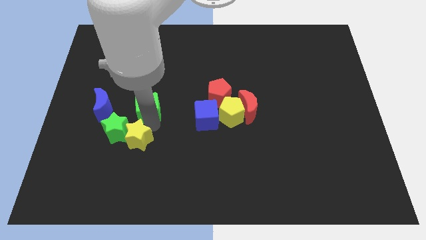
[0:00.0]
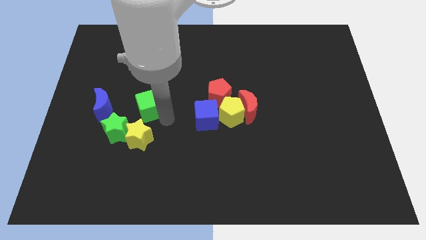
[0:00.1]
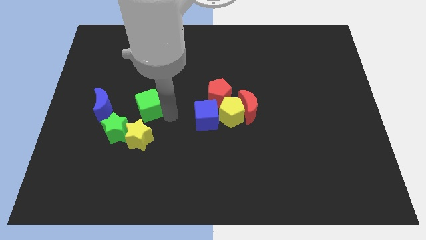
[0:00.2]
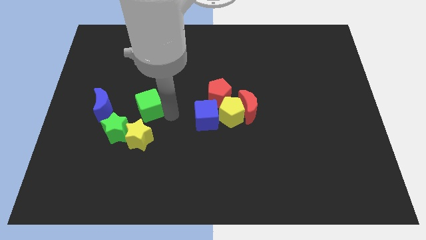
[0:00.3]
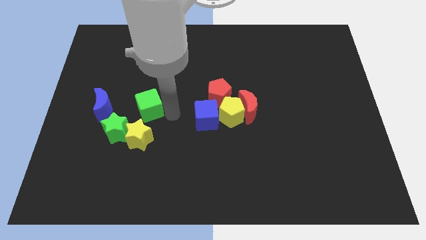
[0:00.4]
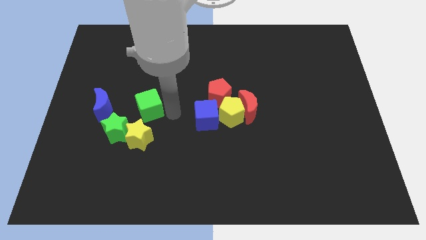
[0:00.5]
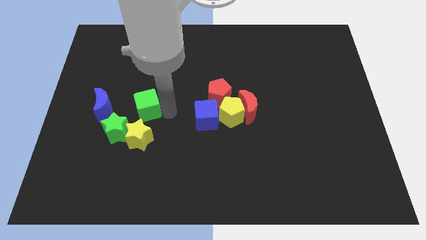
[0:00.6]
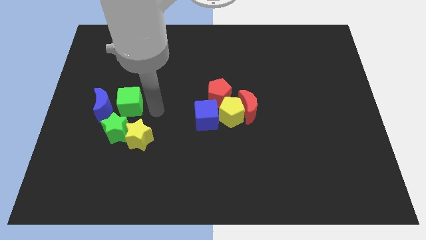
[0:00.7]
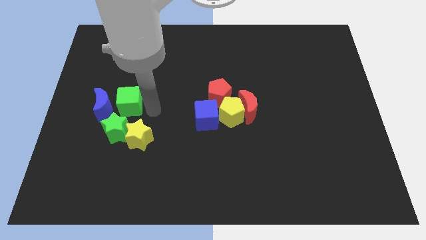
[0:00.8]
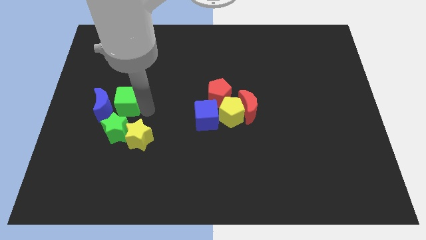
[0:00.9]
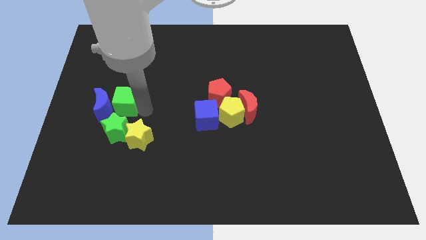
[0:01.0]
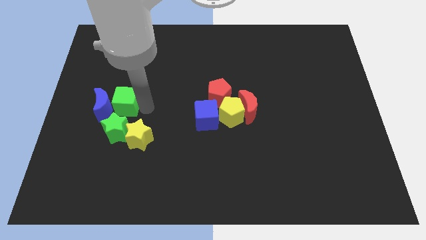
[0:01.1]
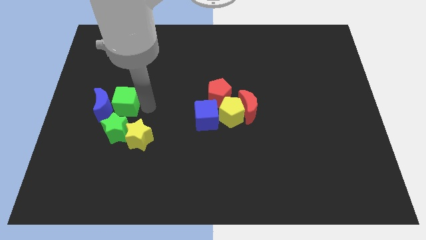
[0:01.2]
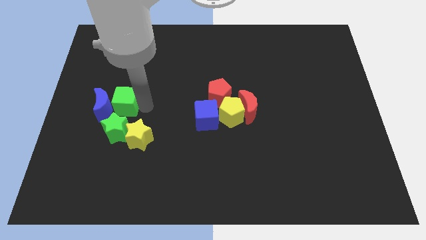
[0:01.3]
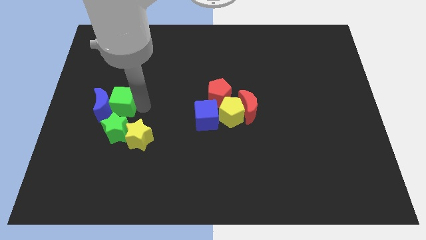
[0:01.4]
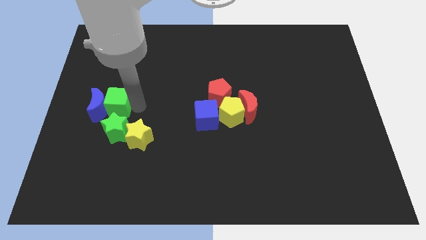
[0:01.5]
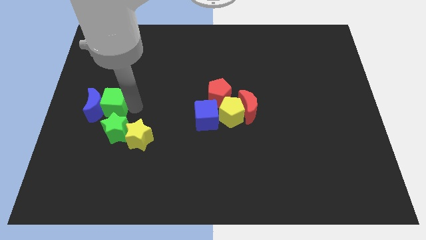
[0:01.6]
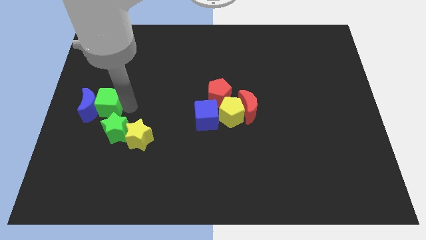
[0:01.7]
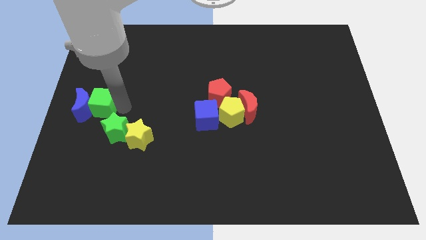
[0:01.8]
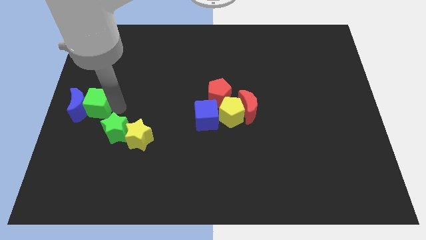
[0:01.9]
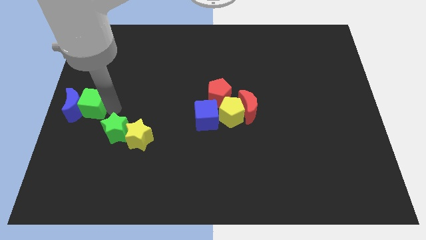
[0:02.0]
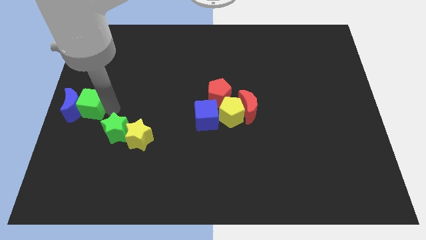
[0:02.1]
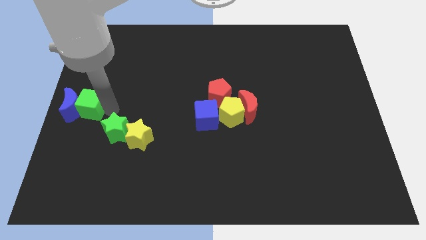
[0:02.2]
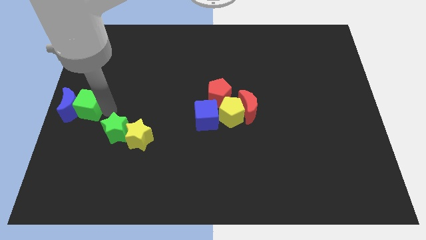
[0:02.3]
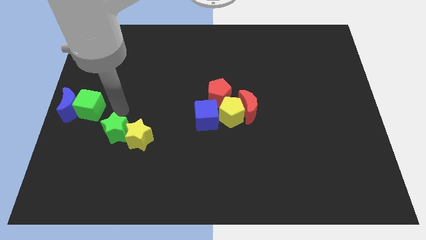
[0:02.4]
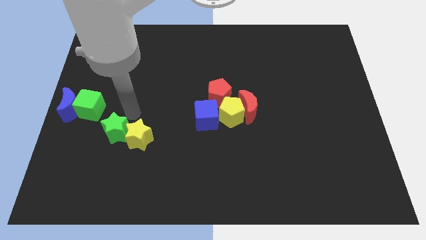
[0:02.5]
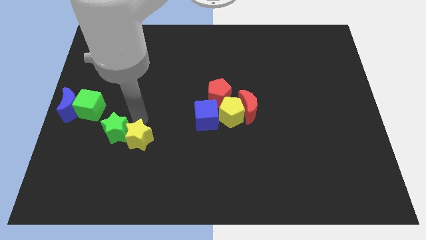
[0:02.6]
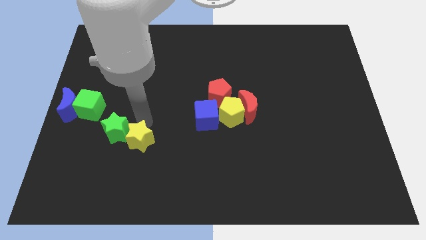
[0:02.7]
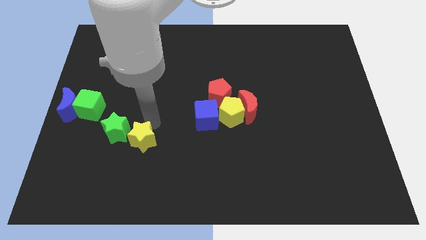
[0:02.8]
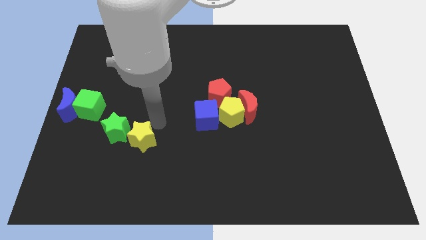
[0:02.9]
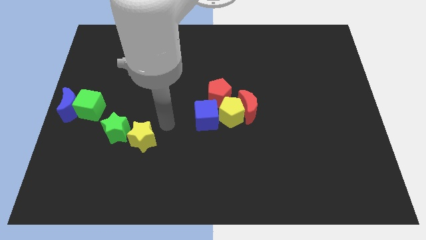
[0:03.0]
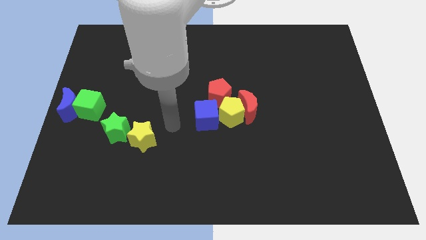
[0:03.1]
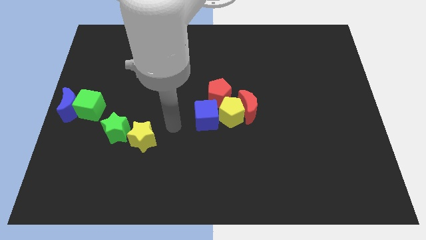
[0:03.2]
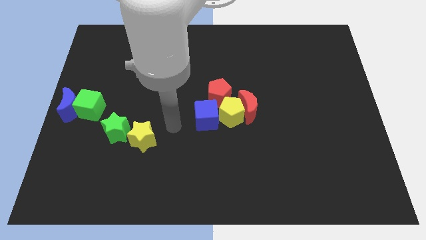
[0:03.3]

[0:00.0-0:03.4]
place the green cube and blue crescent to the center left of the board

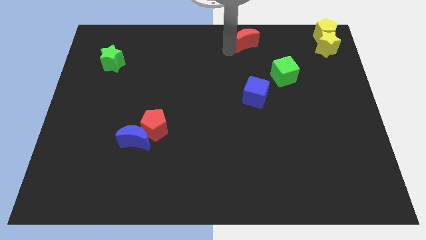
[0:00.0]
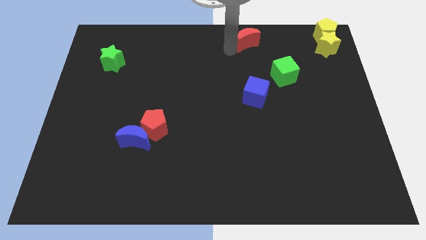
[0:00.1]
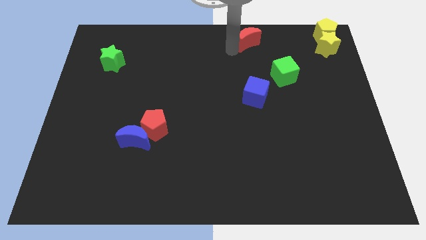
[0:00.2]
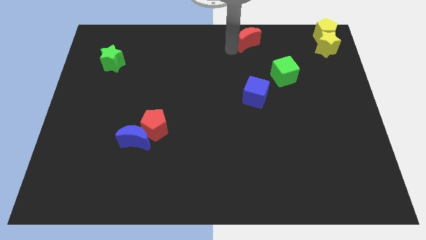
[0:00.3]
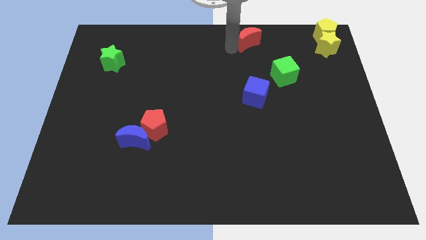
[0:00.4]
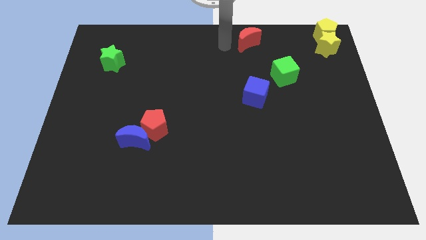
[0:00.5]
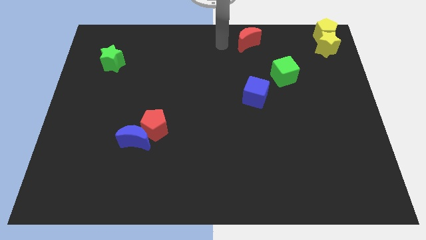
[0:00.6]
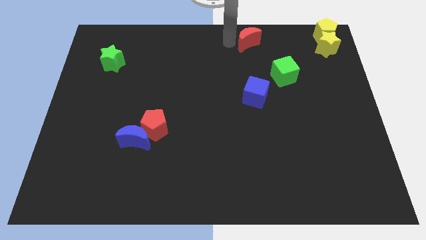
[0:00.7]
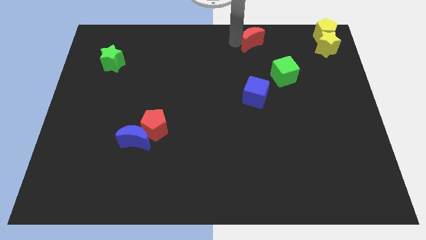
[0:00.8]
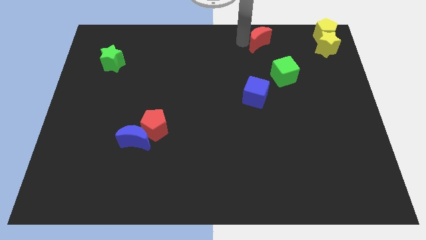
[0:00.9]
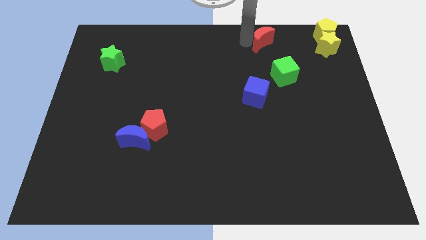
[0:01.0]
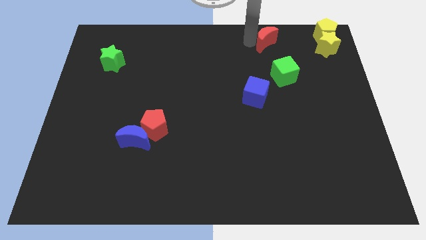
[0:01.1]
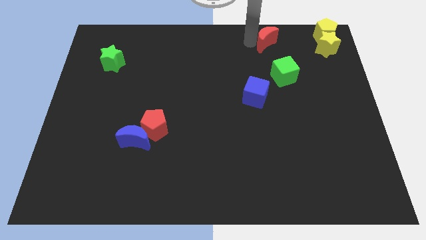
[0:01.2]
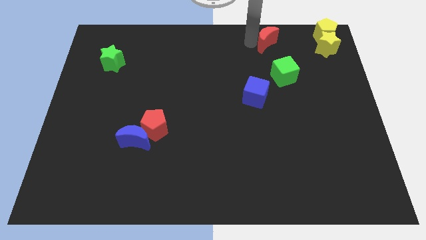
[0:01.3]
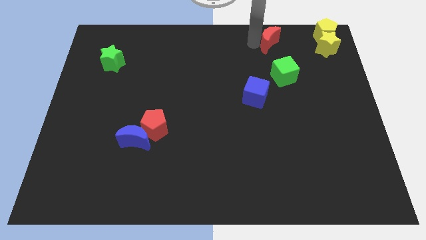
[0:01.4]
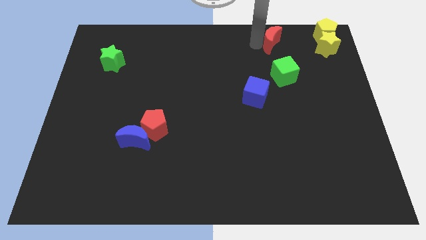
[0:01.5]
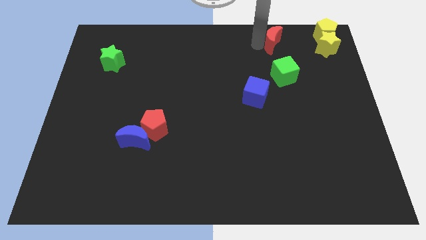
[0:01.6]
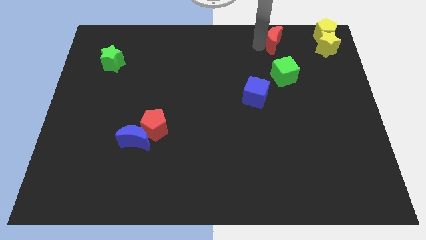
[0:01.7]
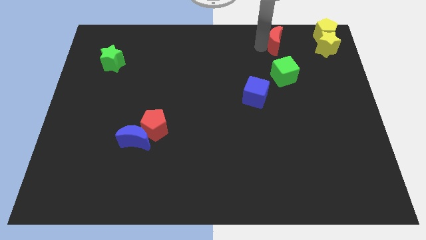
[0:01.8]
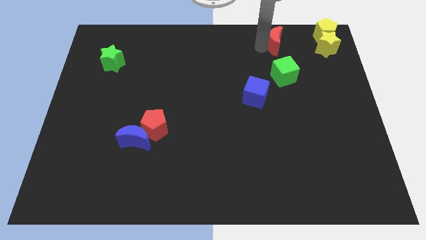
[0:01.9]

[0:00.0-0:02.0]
put the red crescent vertically above the green cube

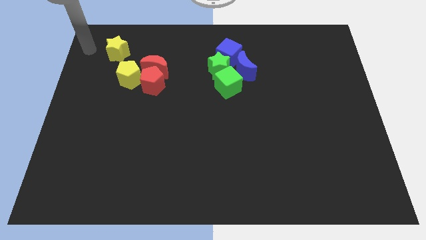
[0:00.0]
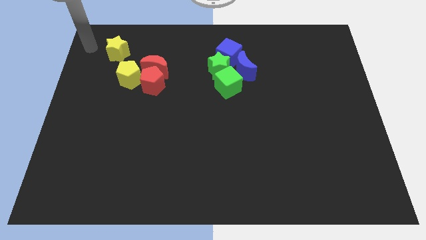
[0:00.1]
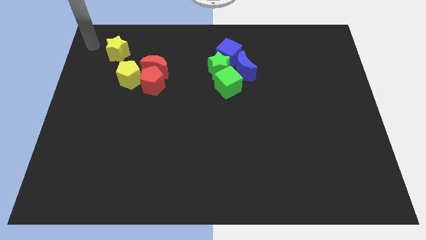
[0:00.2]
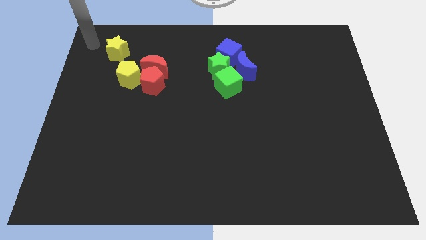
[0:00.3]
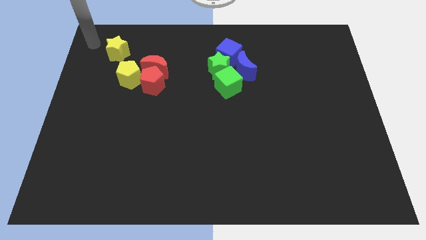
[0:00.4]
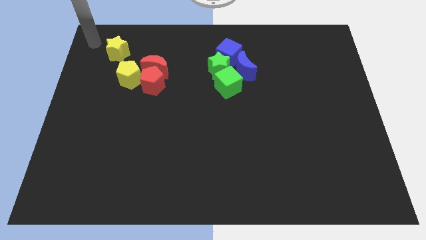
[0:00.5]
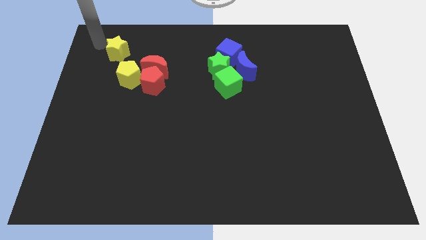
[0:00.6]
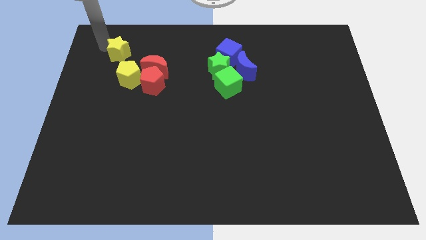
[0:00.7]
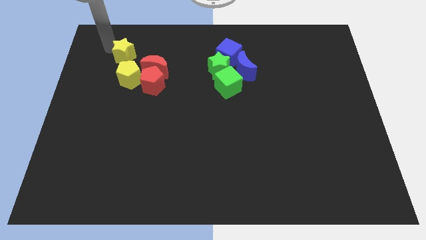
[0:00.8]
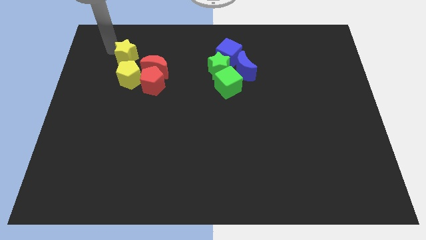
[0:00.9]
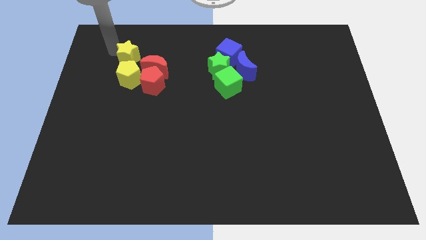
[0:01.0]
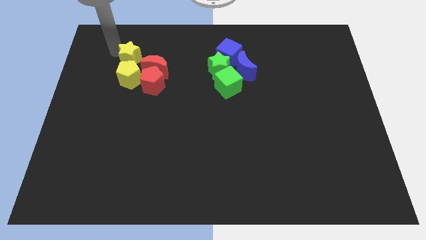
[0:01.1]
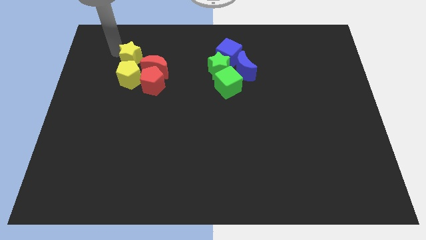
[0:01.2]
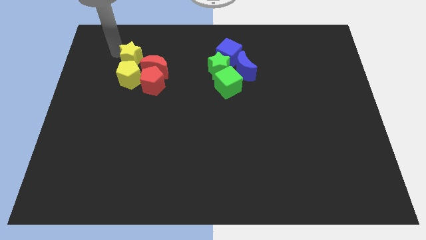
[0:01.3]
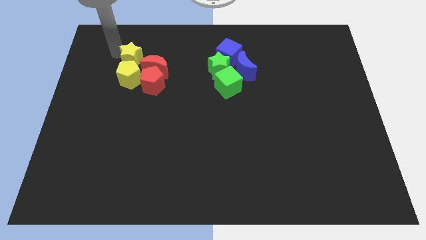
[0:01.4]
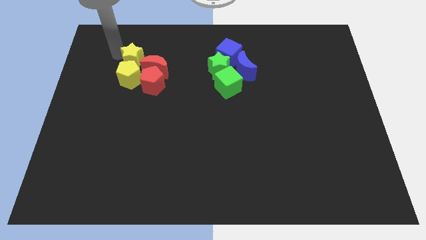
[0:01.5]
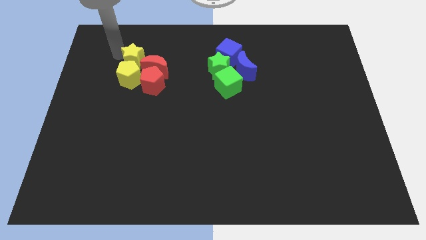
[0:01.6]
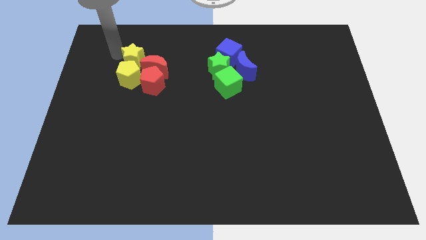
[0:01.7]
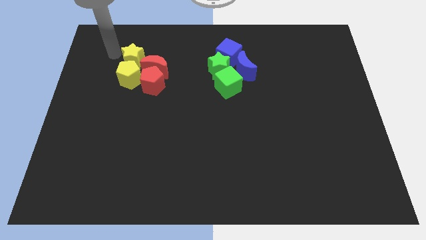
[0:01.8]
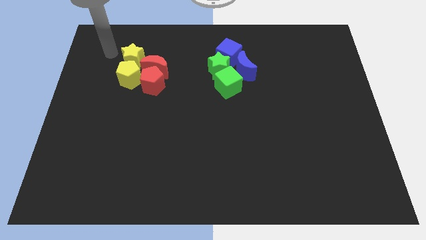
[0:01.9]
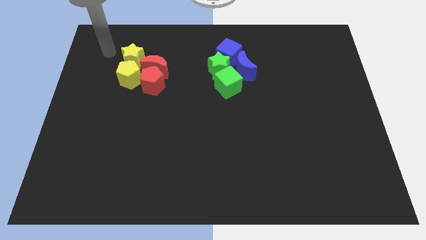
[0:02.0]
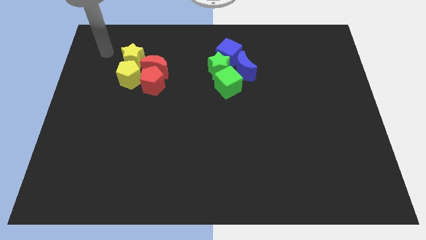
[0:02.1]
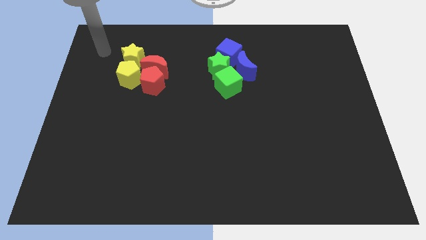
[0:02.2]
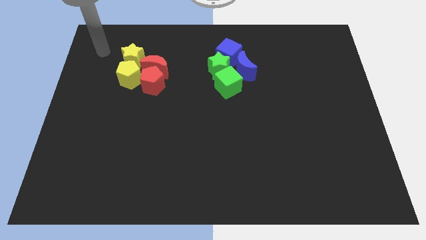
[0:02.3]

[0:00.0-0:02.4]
move the yellow star close to the yellow pentagon

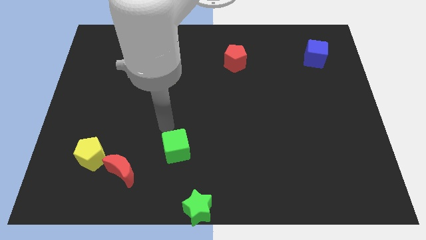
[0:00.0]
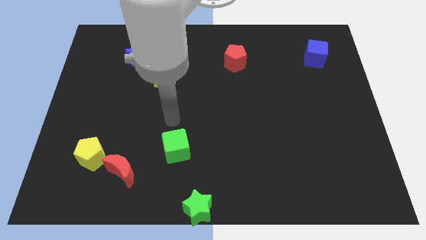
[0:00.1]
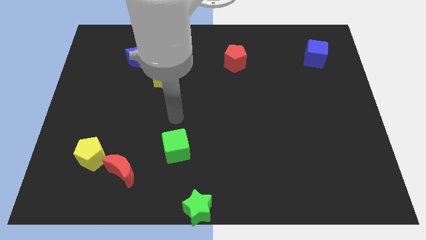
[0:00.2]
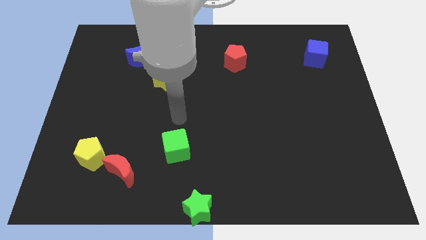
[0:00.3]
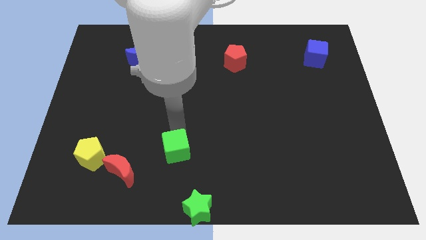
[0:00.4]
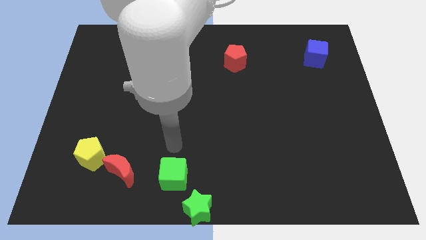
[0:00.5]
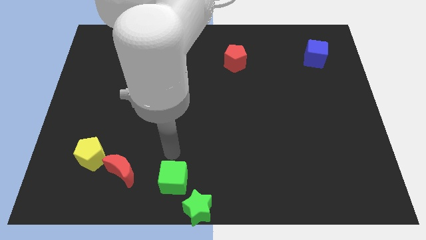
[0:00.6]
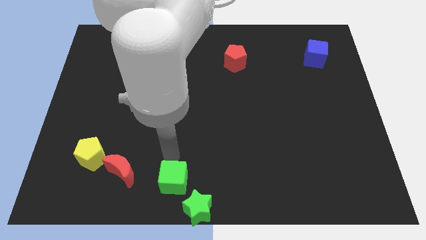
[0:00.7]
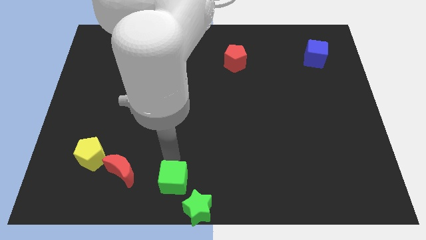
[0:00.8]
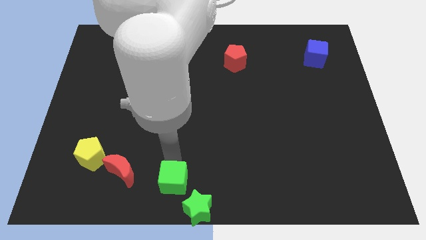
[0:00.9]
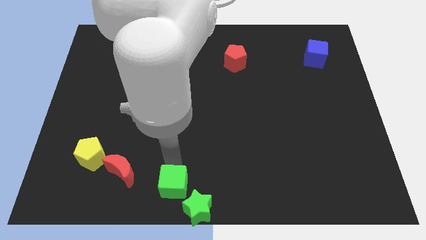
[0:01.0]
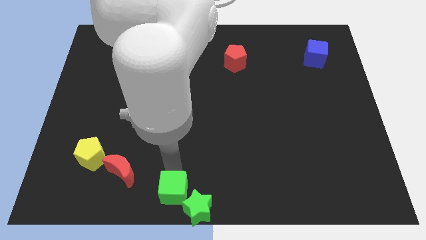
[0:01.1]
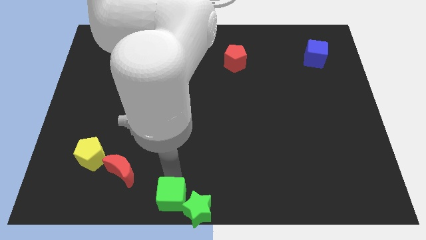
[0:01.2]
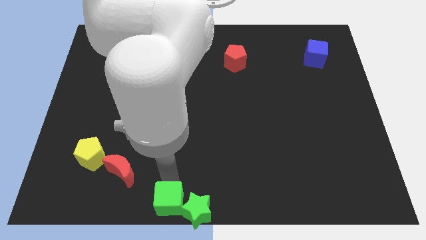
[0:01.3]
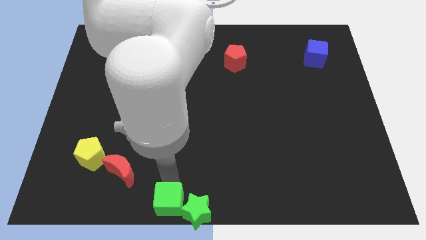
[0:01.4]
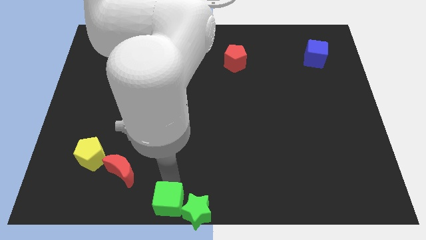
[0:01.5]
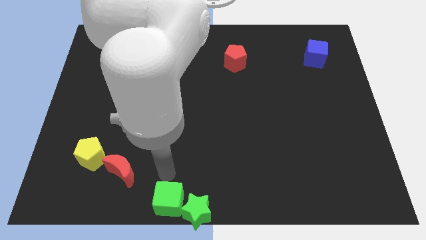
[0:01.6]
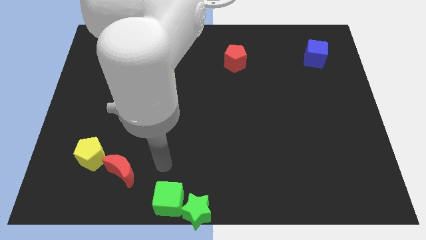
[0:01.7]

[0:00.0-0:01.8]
push the green cube into the green star
